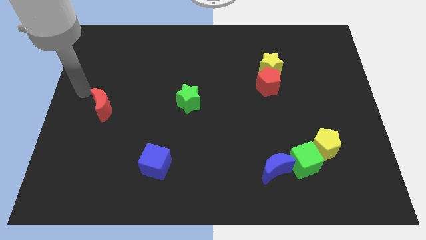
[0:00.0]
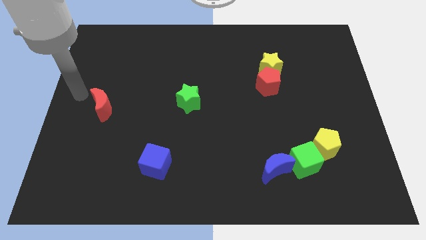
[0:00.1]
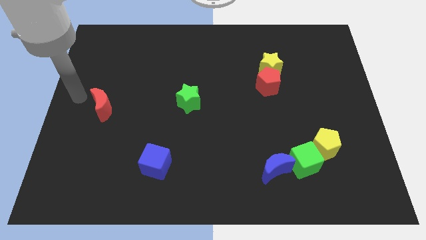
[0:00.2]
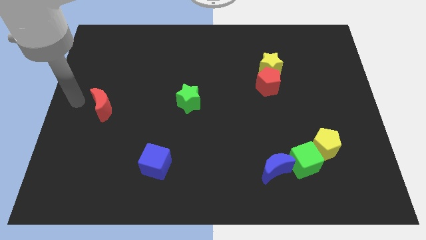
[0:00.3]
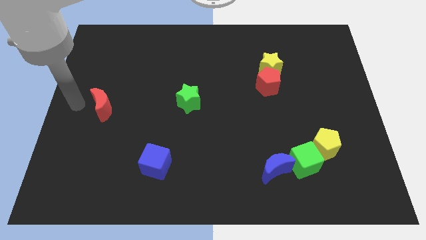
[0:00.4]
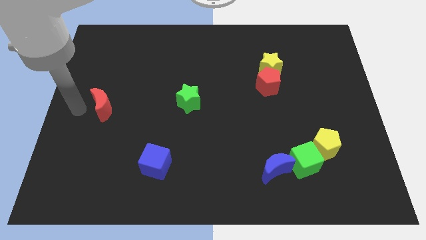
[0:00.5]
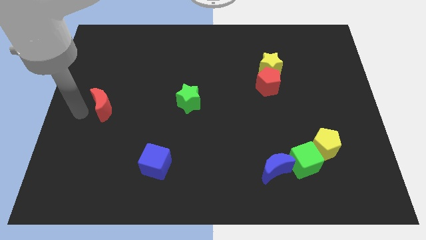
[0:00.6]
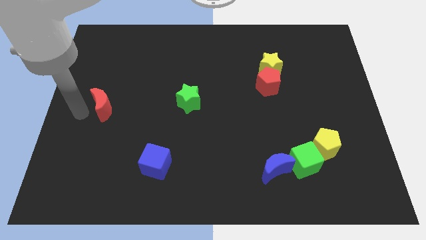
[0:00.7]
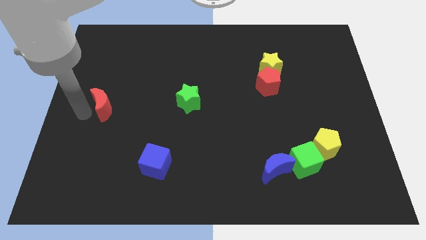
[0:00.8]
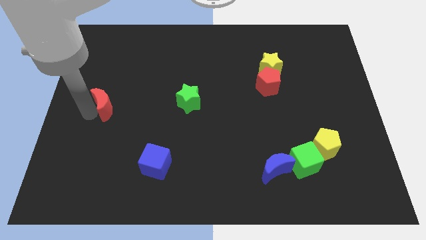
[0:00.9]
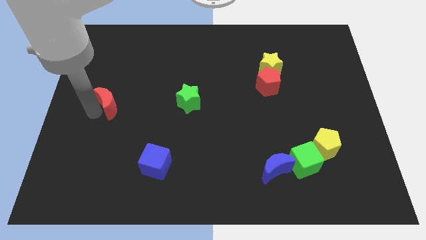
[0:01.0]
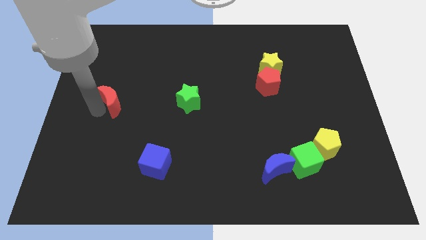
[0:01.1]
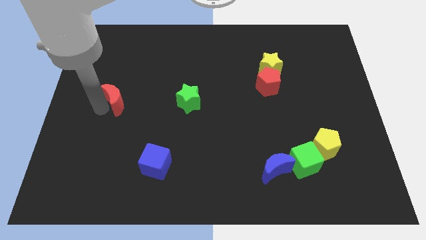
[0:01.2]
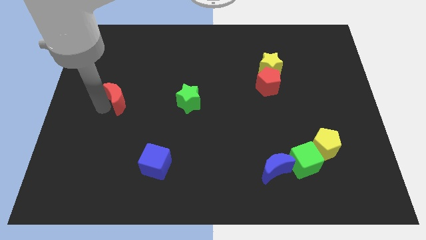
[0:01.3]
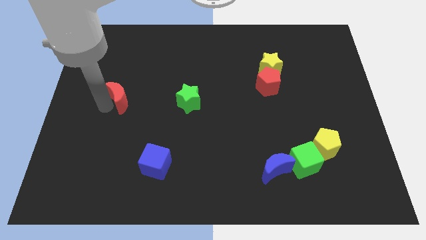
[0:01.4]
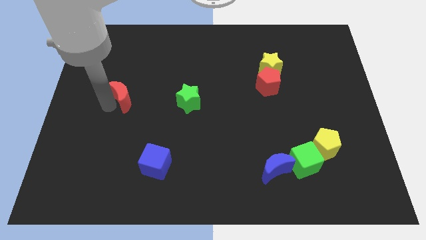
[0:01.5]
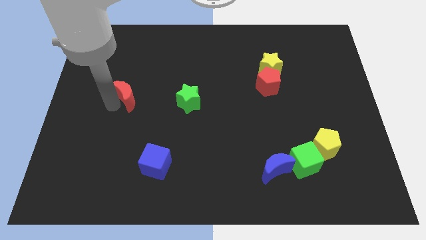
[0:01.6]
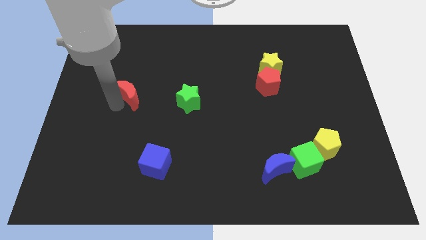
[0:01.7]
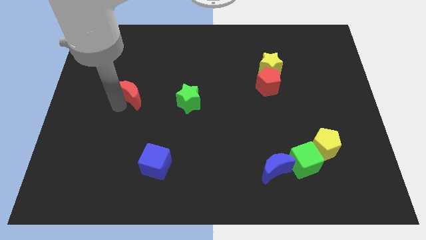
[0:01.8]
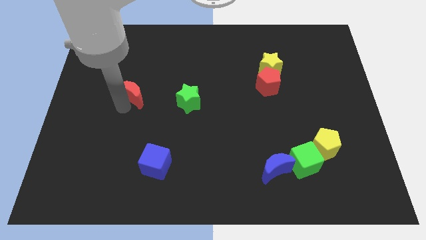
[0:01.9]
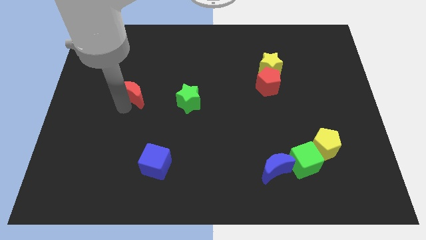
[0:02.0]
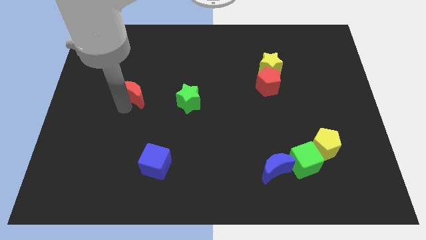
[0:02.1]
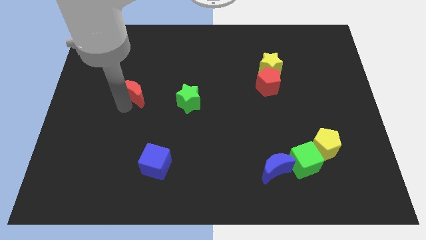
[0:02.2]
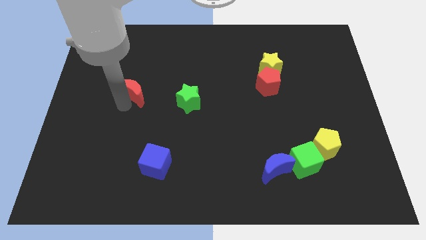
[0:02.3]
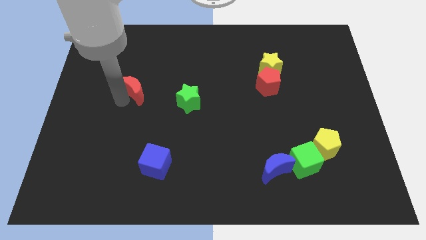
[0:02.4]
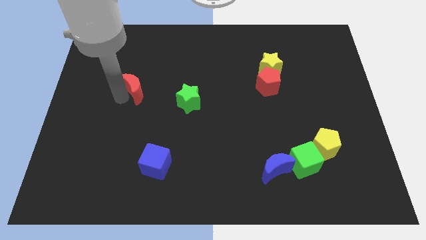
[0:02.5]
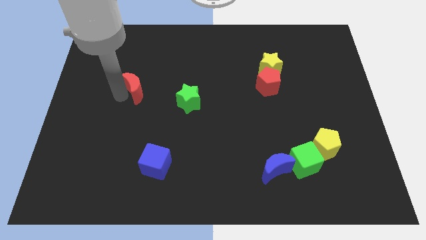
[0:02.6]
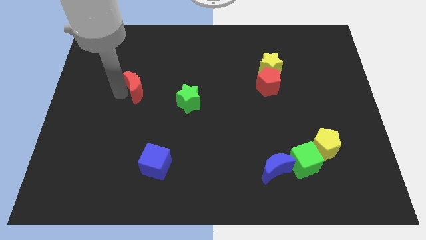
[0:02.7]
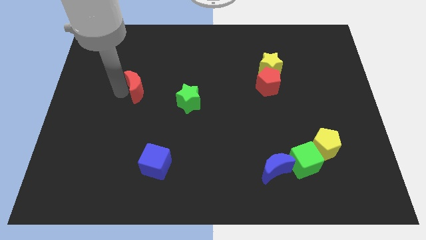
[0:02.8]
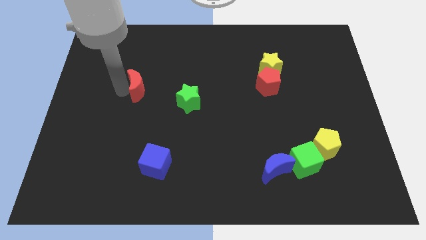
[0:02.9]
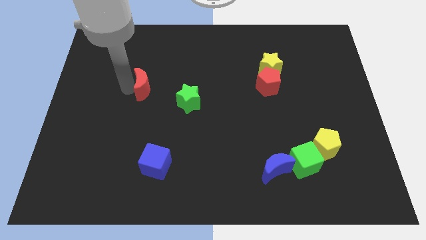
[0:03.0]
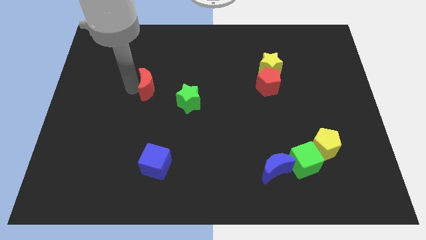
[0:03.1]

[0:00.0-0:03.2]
place the red moon near the green star

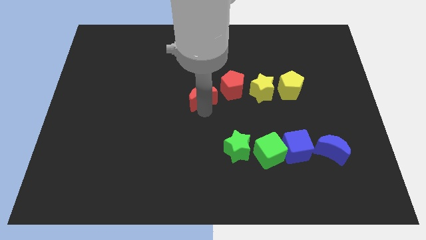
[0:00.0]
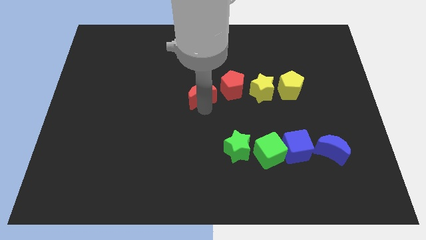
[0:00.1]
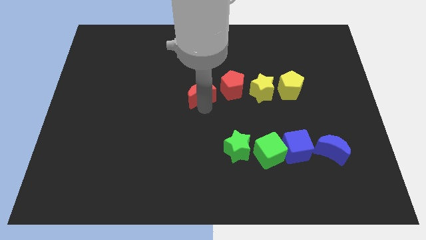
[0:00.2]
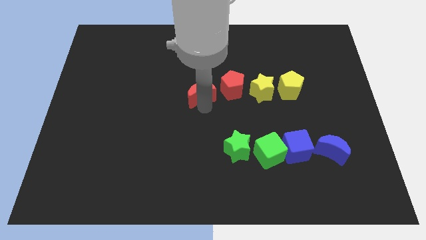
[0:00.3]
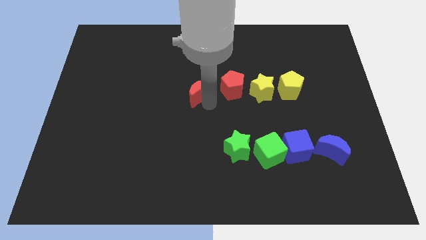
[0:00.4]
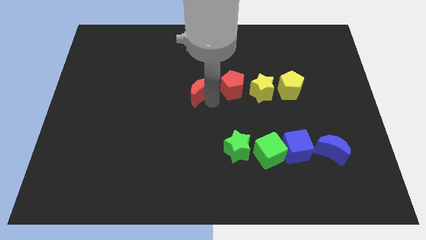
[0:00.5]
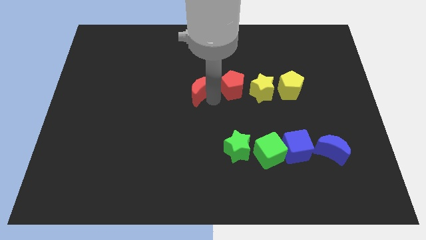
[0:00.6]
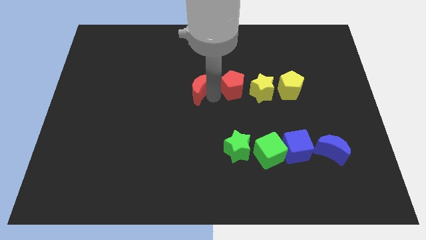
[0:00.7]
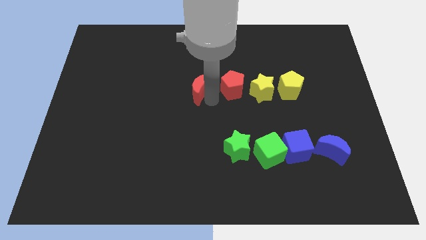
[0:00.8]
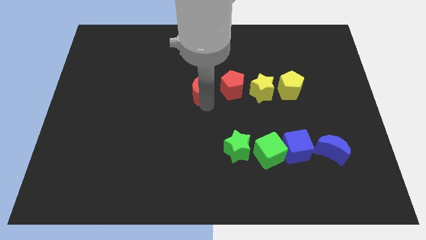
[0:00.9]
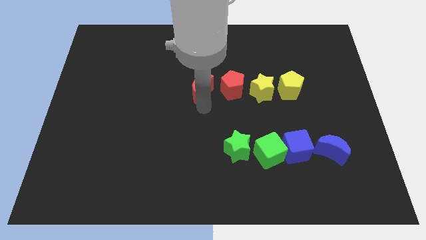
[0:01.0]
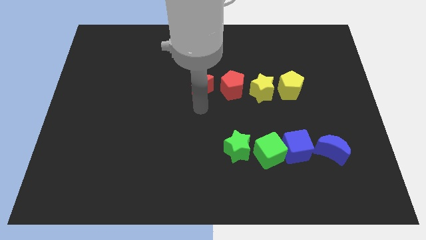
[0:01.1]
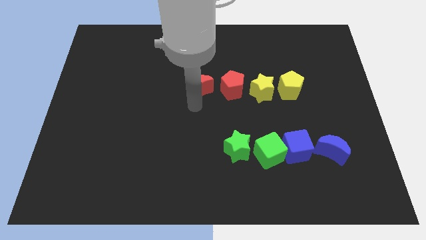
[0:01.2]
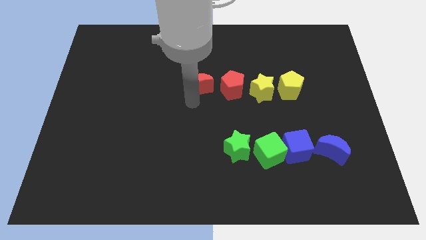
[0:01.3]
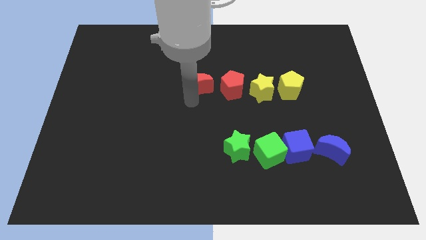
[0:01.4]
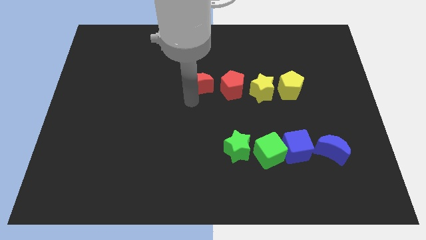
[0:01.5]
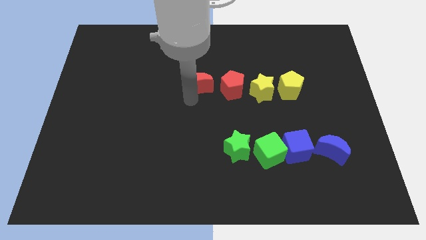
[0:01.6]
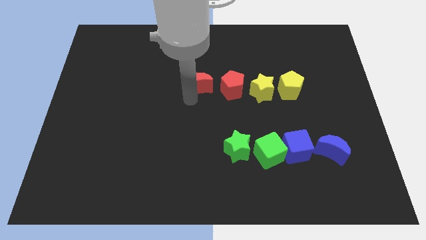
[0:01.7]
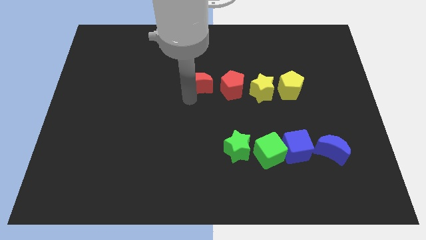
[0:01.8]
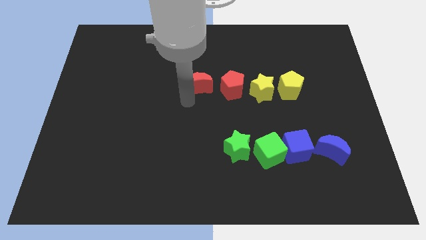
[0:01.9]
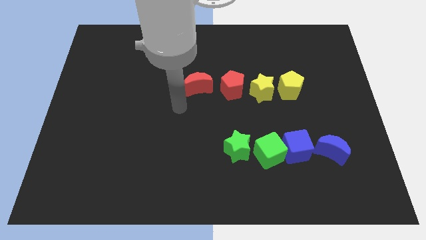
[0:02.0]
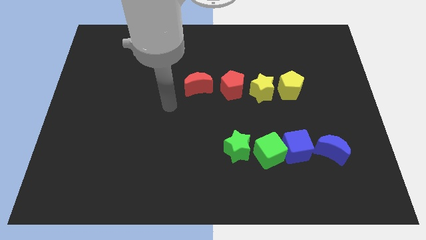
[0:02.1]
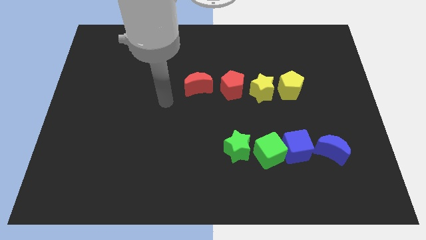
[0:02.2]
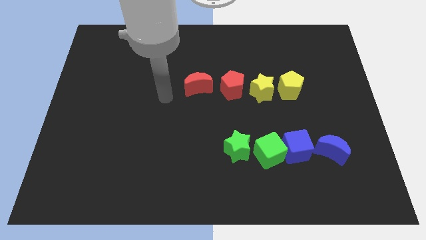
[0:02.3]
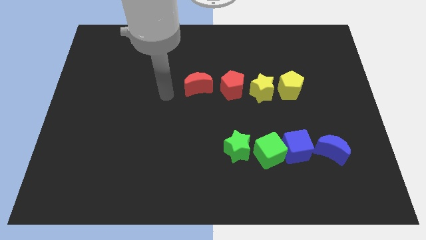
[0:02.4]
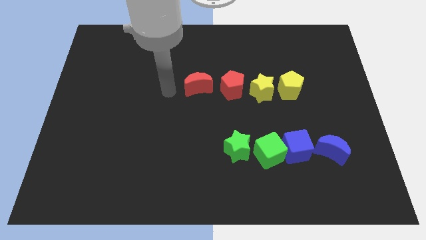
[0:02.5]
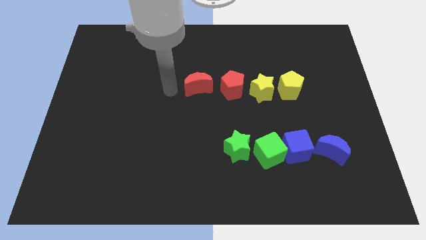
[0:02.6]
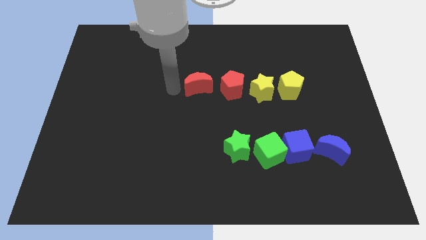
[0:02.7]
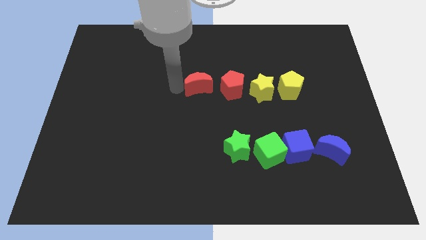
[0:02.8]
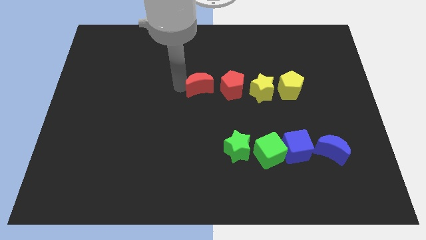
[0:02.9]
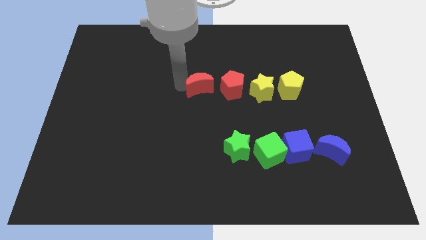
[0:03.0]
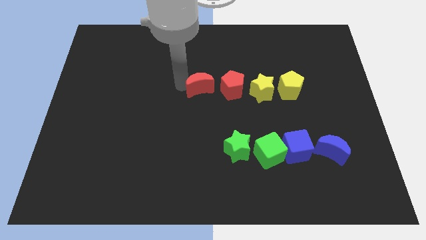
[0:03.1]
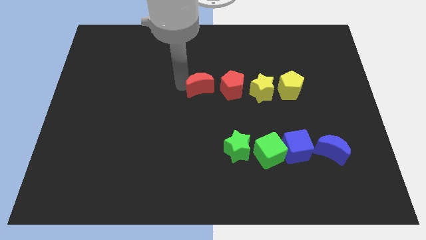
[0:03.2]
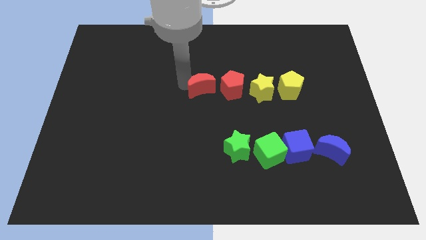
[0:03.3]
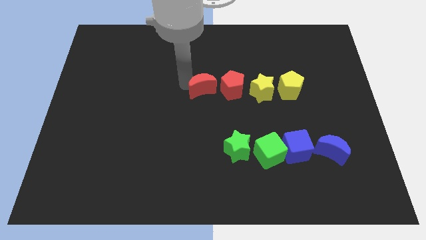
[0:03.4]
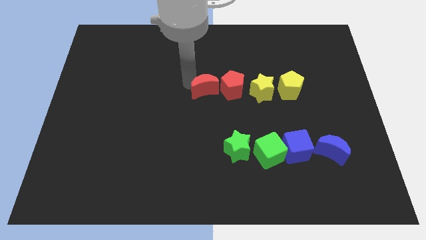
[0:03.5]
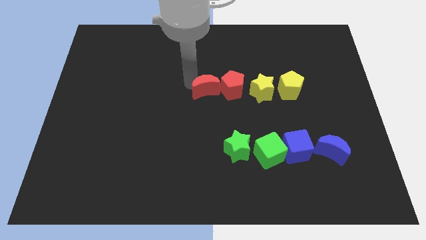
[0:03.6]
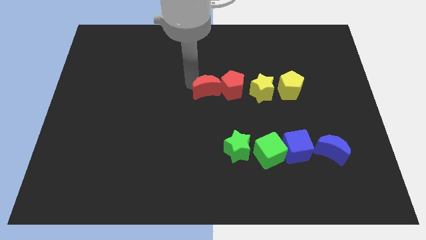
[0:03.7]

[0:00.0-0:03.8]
touch the red pentagon with the red moon

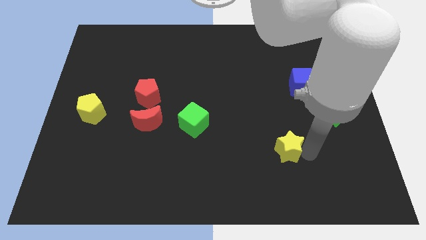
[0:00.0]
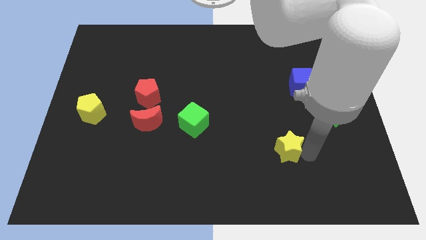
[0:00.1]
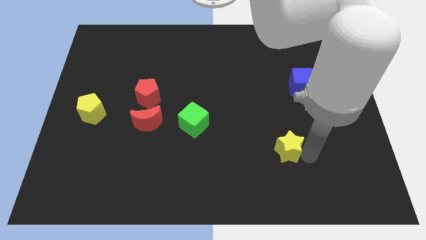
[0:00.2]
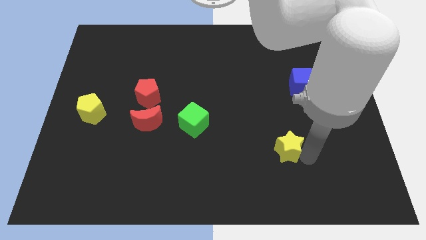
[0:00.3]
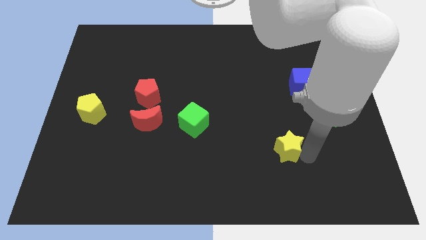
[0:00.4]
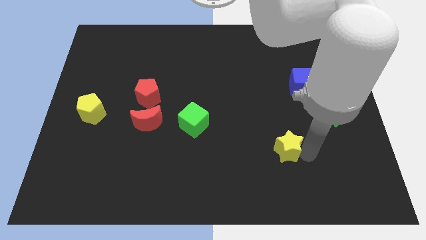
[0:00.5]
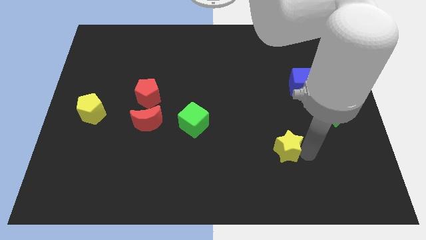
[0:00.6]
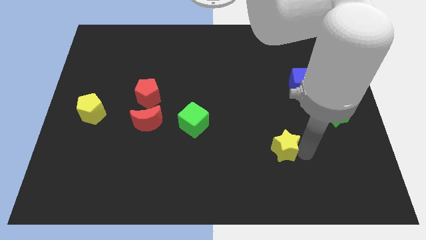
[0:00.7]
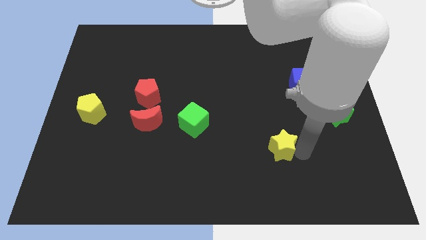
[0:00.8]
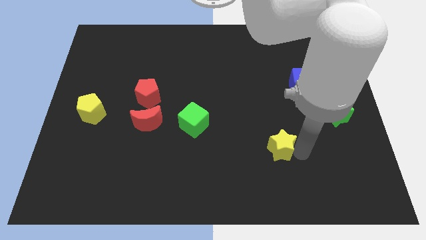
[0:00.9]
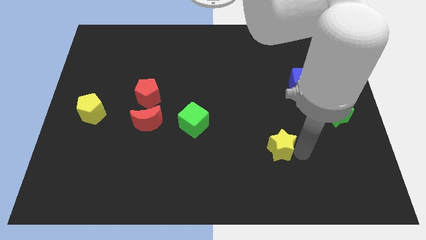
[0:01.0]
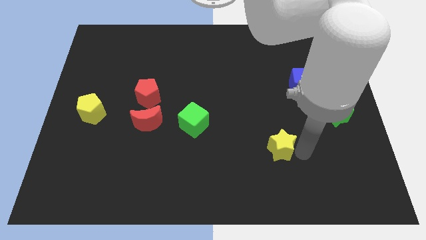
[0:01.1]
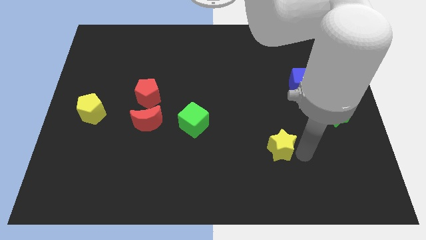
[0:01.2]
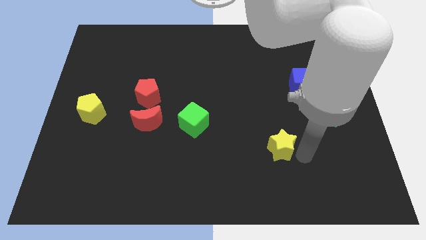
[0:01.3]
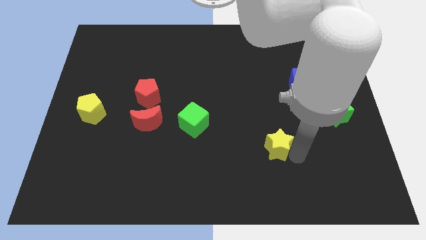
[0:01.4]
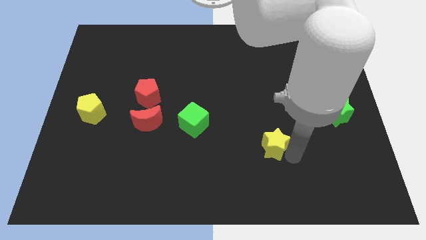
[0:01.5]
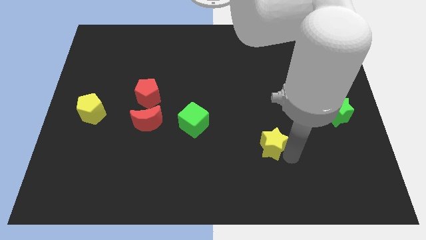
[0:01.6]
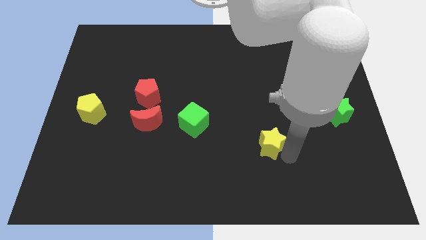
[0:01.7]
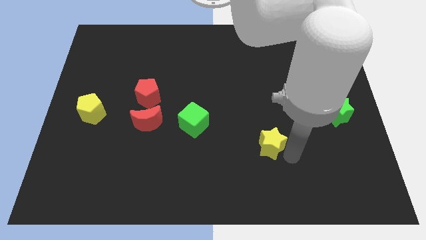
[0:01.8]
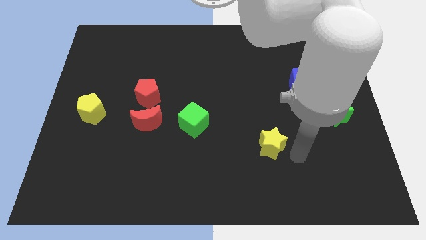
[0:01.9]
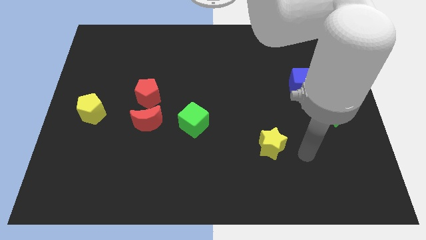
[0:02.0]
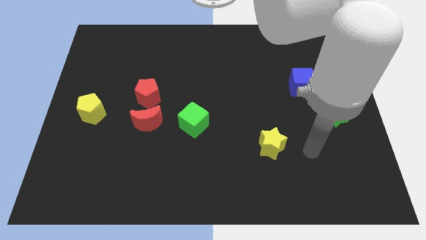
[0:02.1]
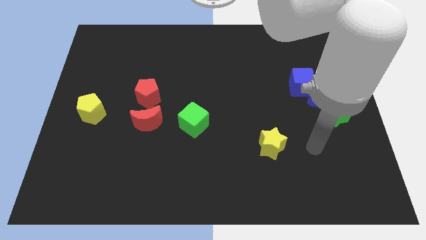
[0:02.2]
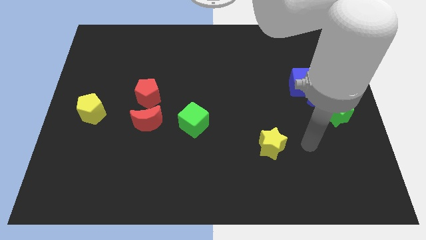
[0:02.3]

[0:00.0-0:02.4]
slightly move the yellow star towards the left side
